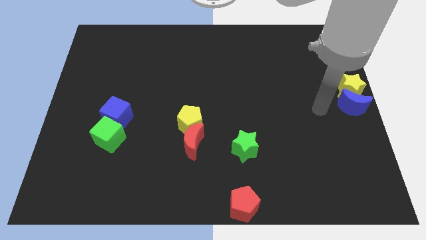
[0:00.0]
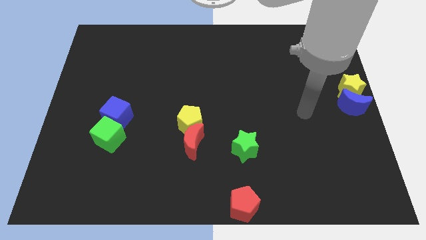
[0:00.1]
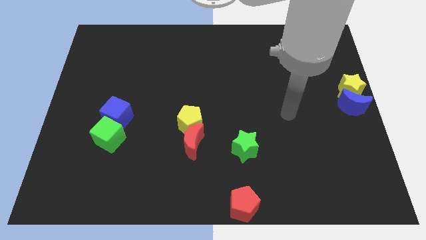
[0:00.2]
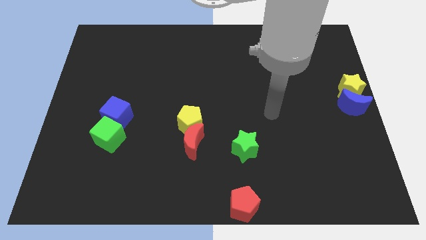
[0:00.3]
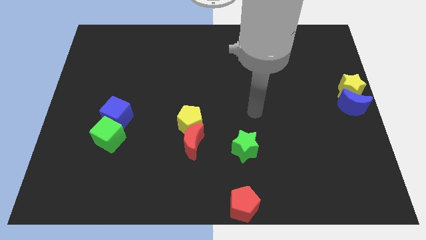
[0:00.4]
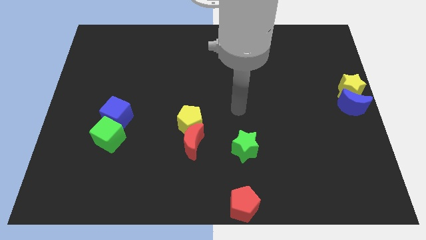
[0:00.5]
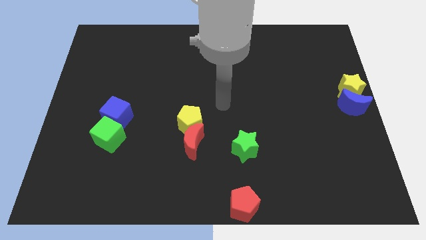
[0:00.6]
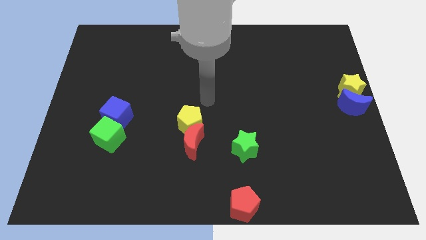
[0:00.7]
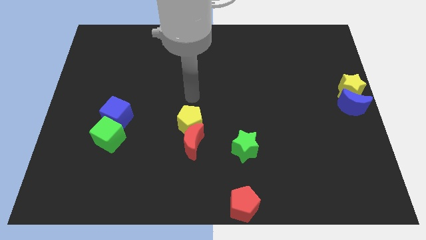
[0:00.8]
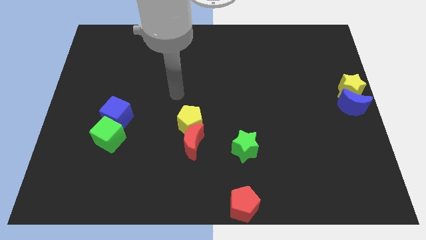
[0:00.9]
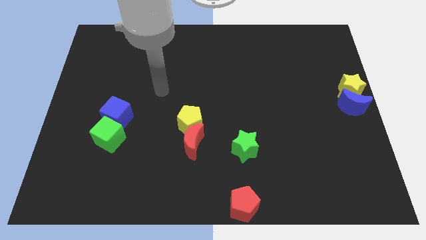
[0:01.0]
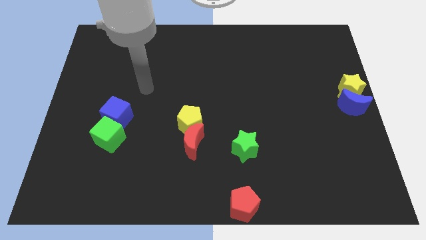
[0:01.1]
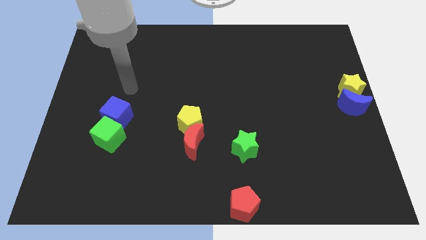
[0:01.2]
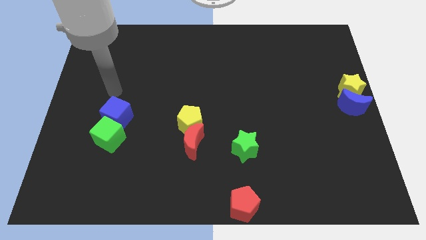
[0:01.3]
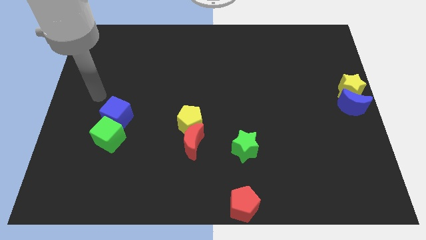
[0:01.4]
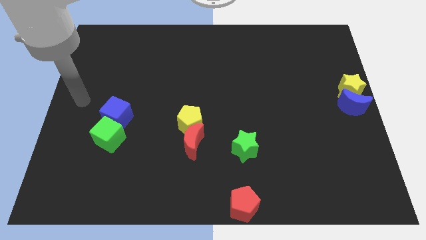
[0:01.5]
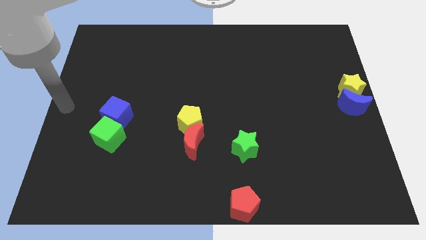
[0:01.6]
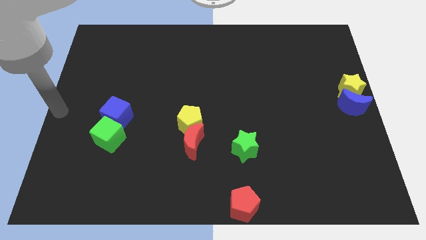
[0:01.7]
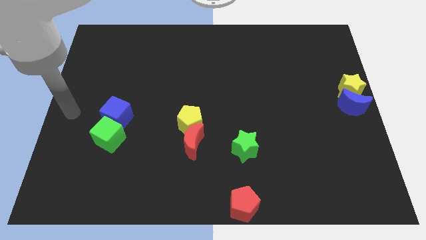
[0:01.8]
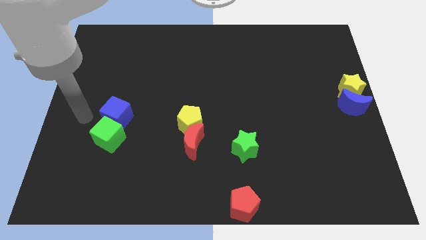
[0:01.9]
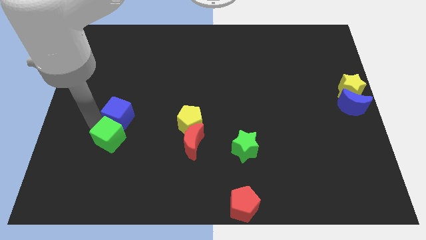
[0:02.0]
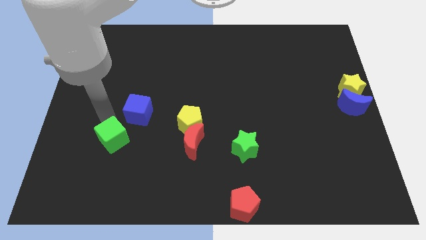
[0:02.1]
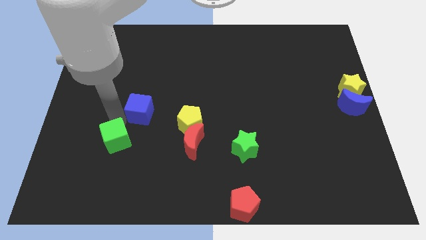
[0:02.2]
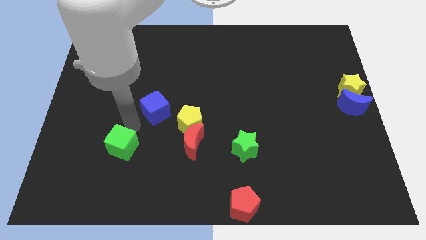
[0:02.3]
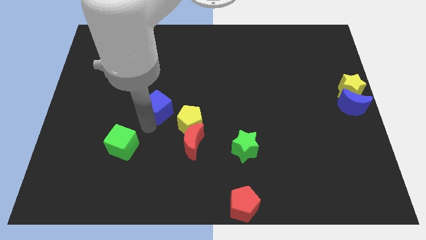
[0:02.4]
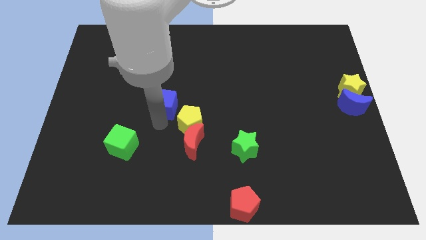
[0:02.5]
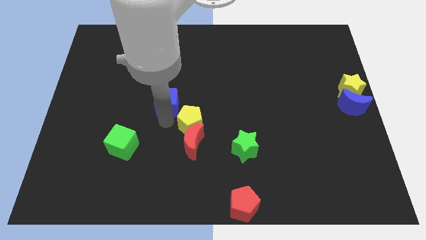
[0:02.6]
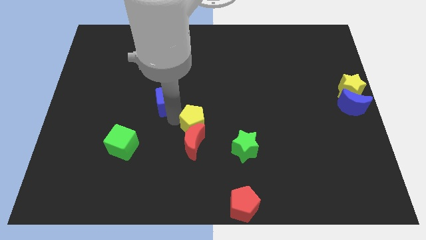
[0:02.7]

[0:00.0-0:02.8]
separate the blue cube and green cube from each other

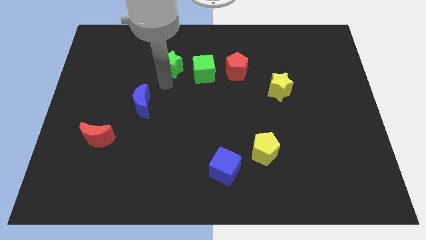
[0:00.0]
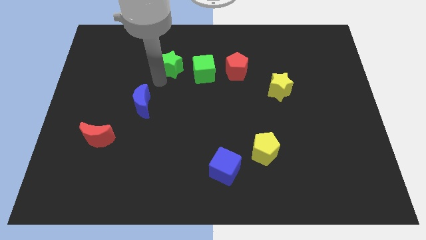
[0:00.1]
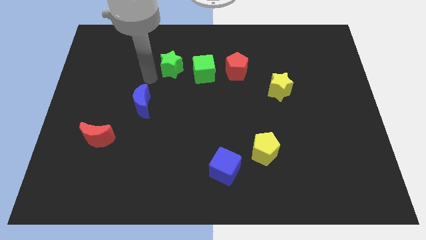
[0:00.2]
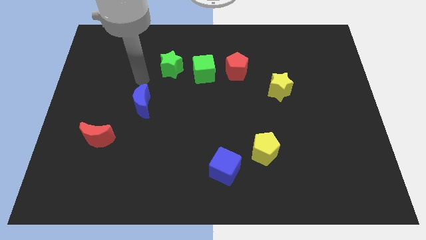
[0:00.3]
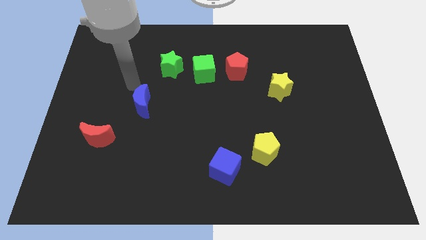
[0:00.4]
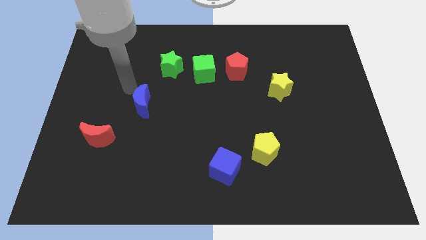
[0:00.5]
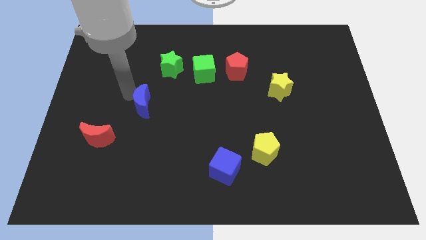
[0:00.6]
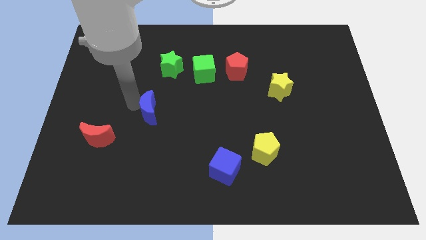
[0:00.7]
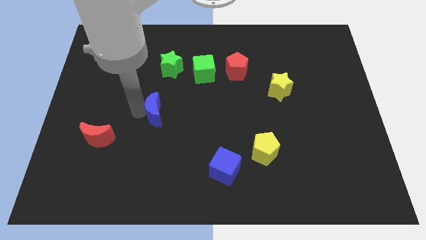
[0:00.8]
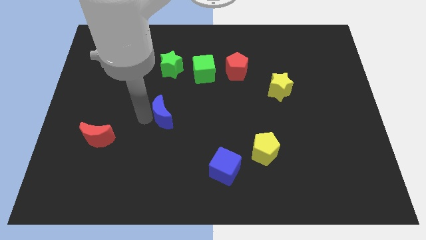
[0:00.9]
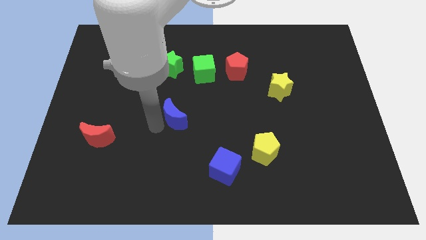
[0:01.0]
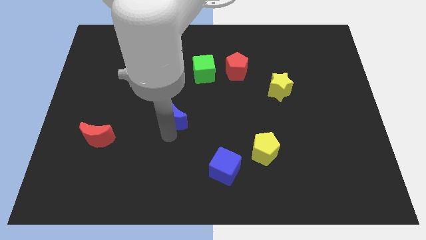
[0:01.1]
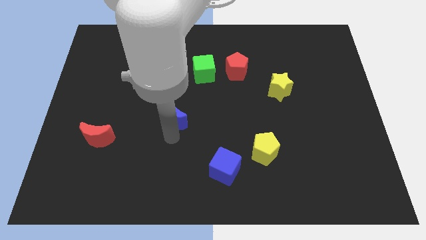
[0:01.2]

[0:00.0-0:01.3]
put blue moon diagonally above blue cube

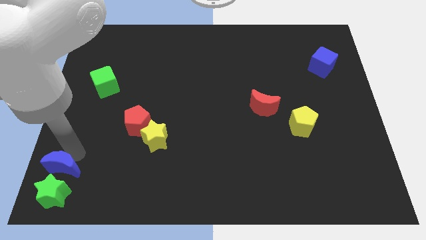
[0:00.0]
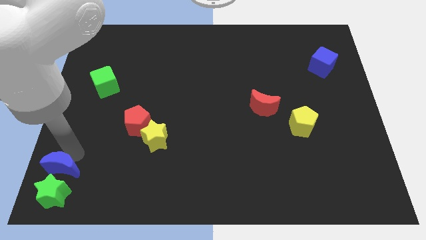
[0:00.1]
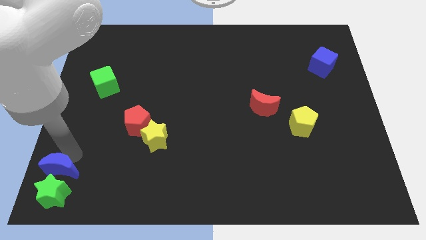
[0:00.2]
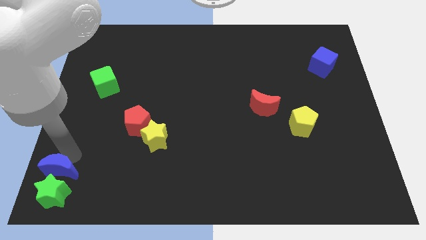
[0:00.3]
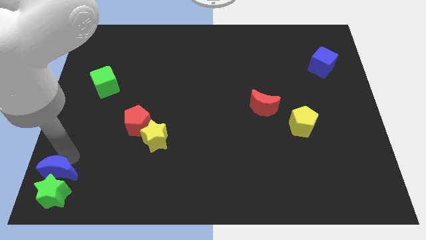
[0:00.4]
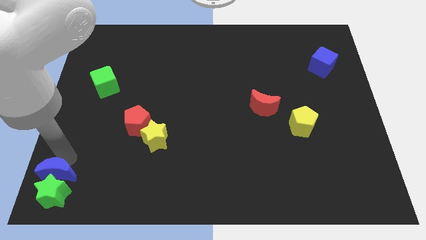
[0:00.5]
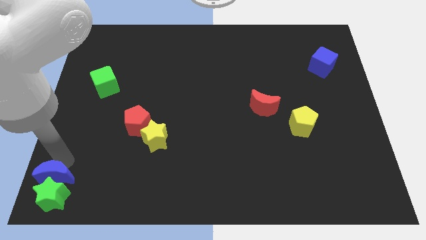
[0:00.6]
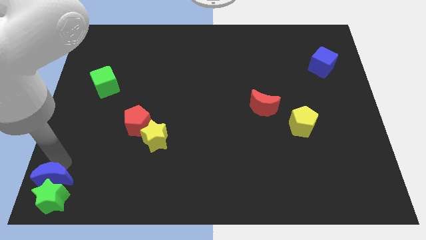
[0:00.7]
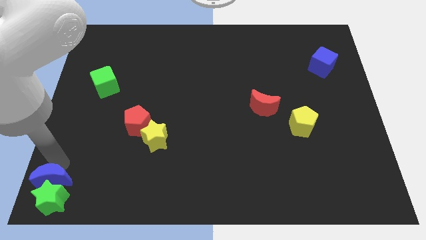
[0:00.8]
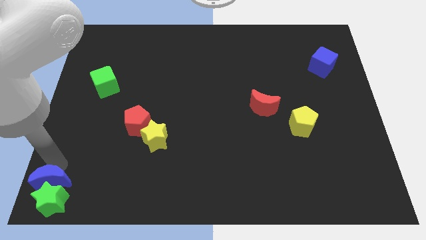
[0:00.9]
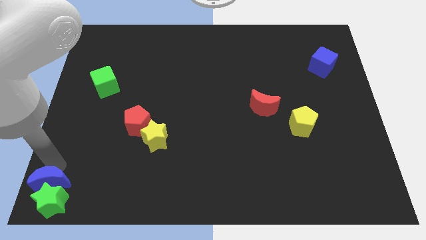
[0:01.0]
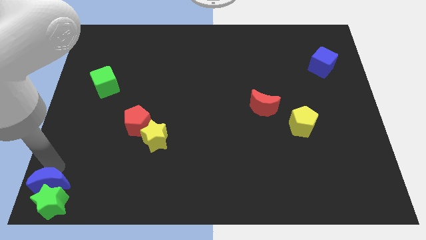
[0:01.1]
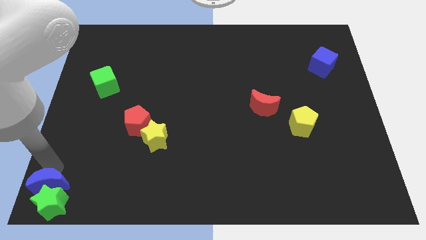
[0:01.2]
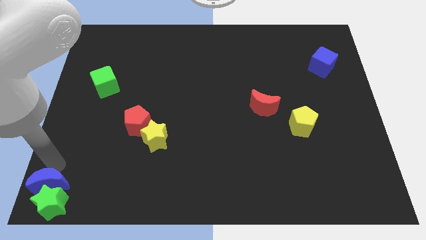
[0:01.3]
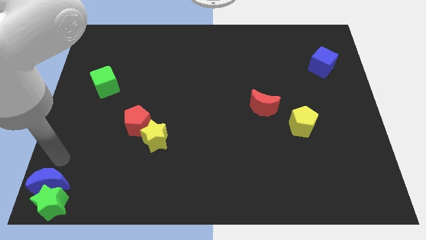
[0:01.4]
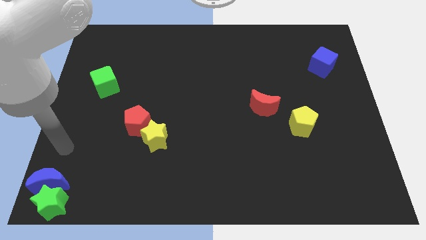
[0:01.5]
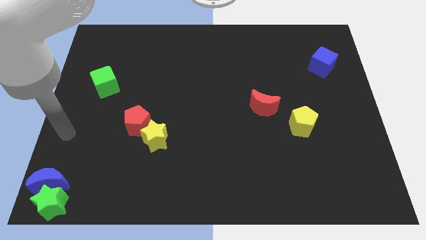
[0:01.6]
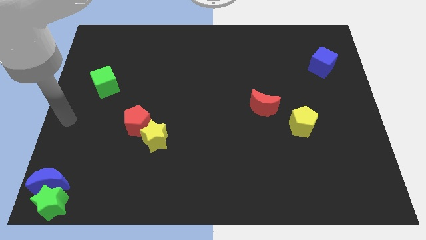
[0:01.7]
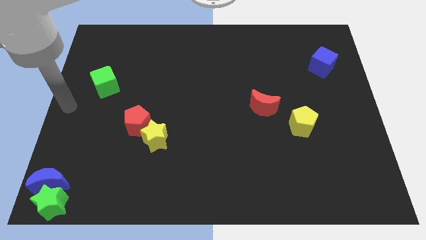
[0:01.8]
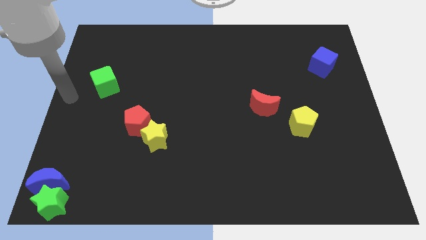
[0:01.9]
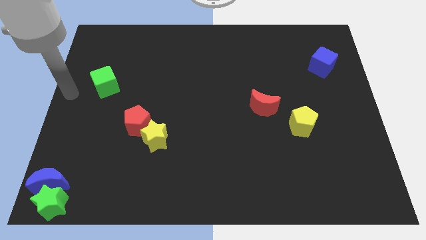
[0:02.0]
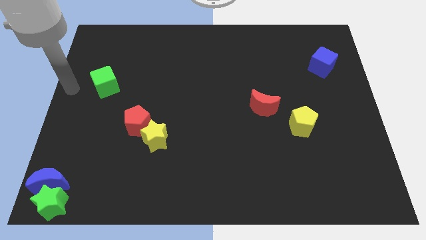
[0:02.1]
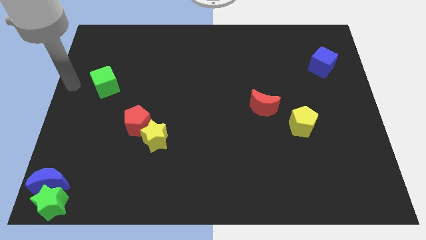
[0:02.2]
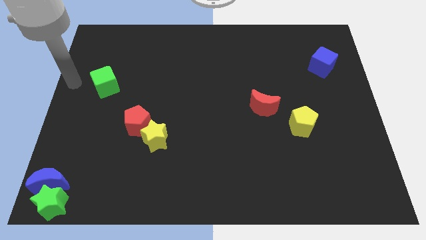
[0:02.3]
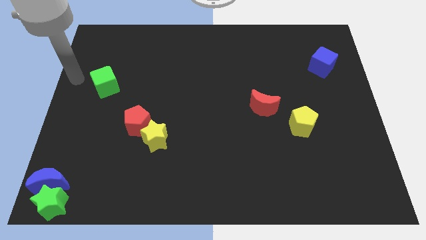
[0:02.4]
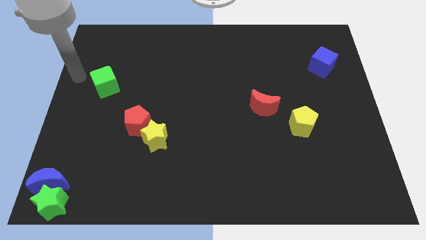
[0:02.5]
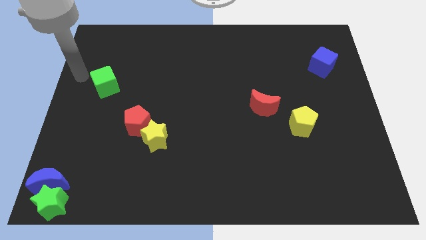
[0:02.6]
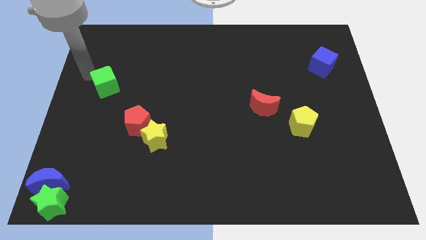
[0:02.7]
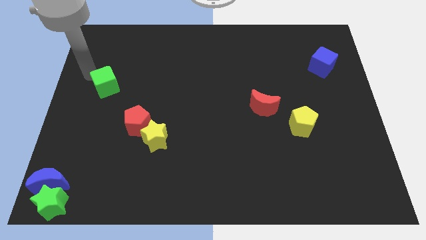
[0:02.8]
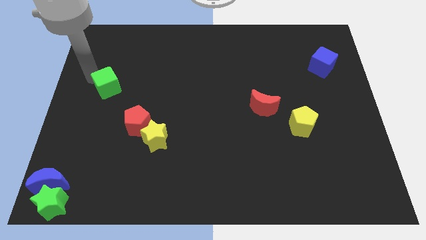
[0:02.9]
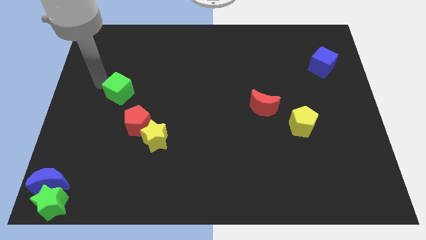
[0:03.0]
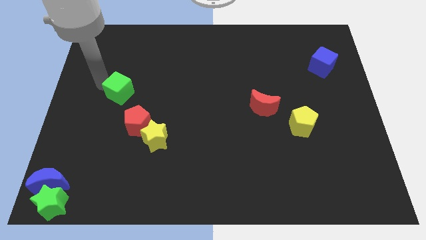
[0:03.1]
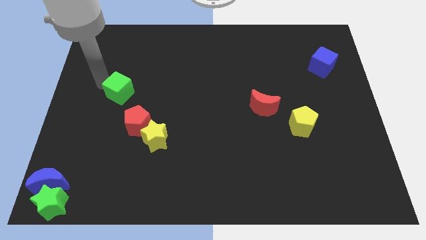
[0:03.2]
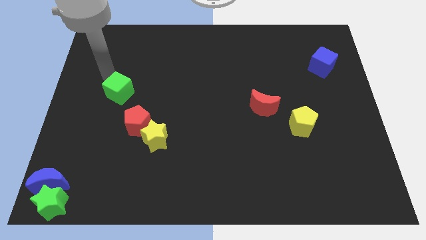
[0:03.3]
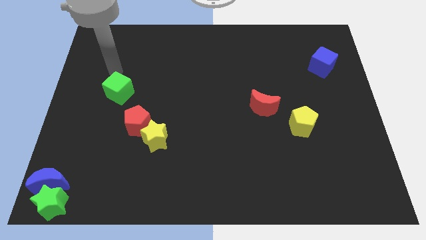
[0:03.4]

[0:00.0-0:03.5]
move the green star and blue moon to the bottom left corner

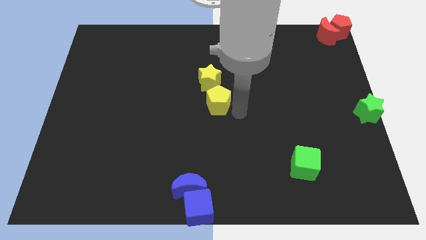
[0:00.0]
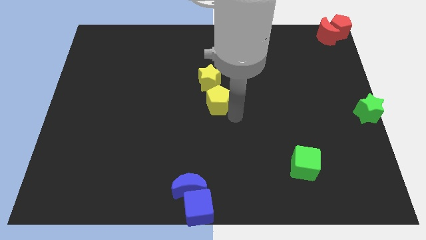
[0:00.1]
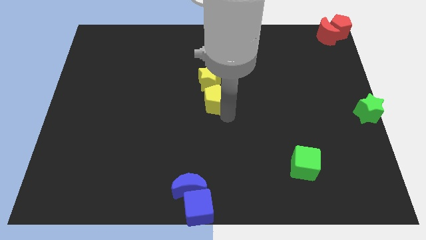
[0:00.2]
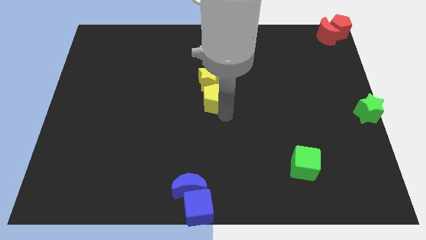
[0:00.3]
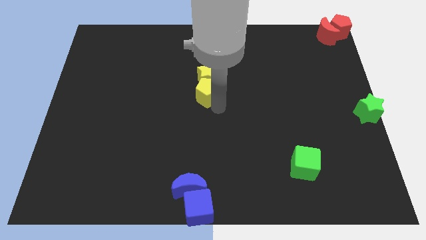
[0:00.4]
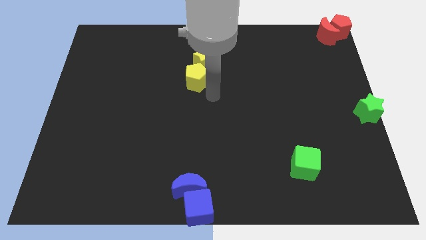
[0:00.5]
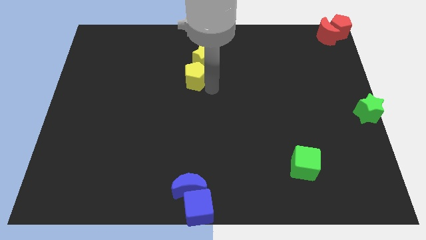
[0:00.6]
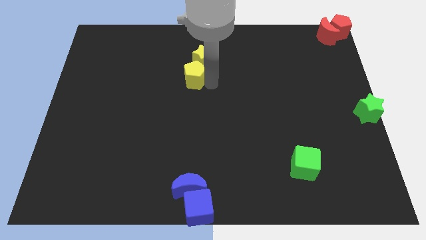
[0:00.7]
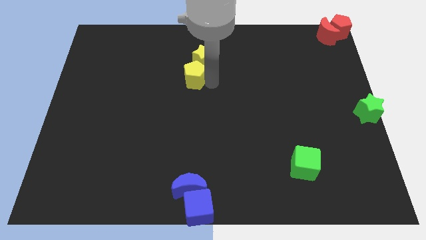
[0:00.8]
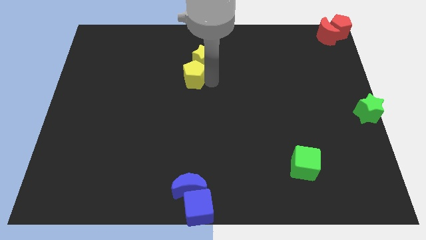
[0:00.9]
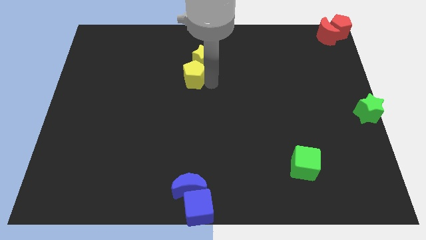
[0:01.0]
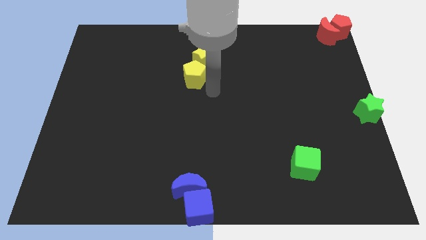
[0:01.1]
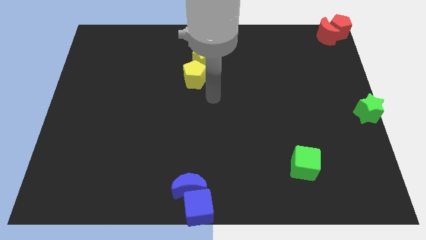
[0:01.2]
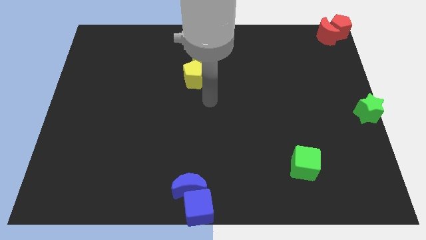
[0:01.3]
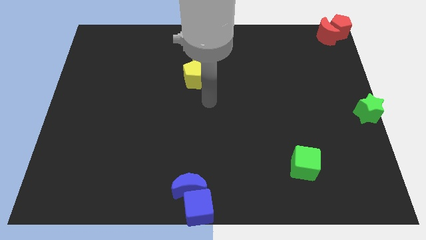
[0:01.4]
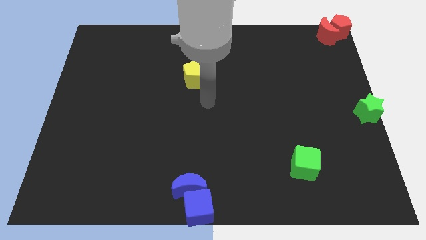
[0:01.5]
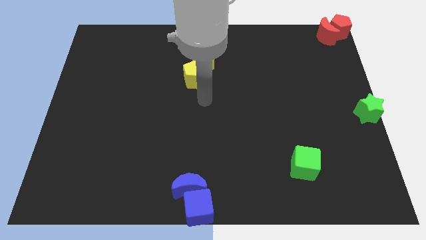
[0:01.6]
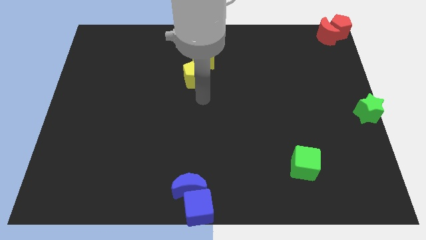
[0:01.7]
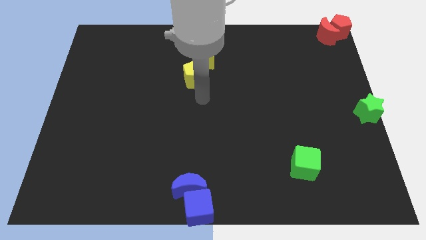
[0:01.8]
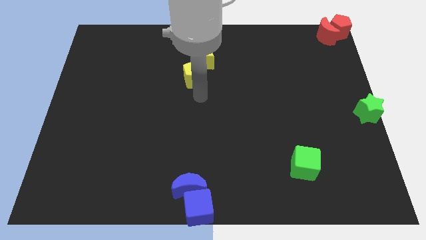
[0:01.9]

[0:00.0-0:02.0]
slide the yellow pentagon with yellow star towards the top center of the board
